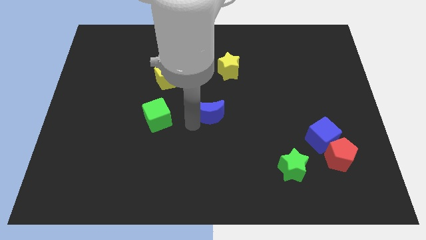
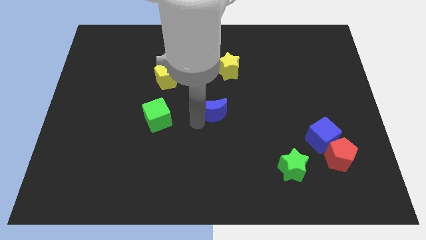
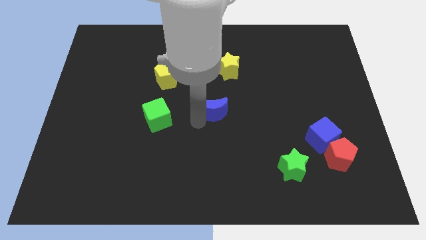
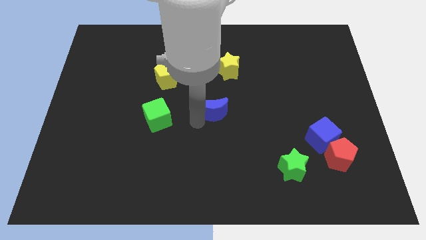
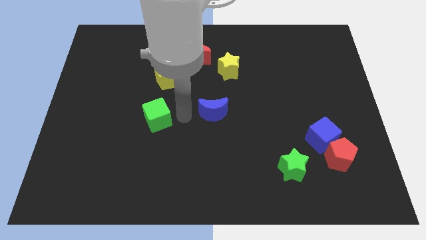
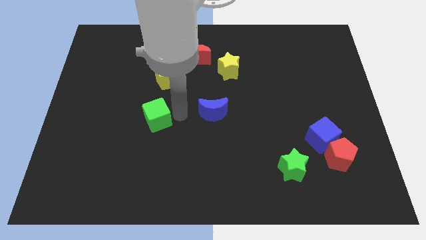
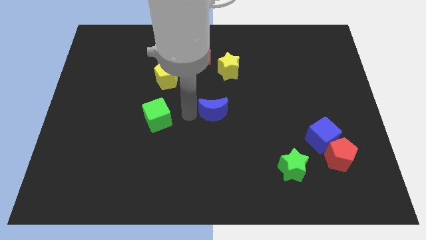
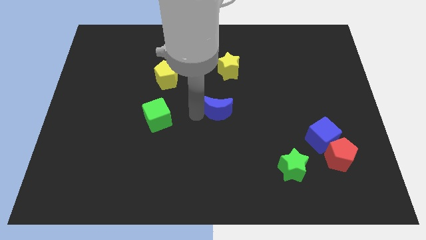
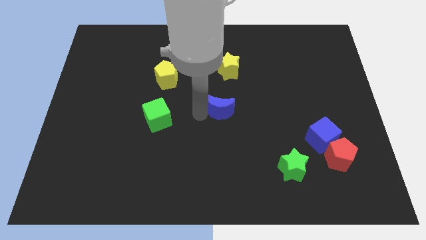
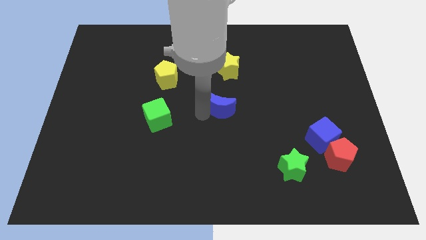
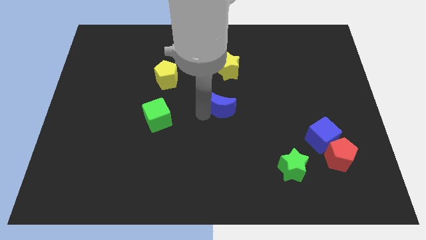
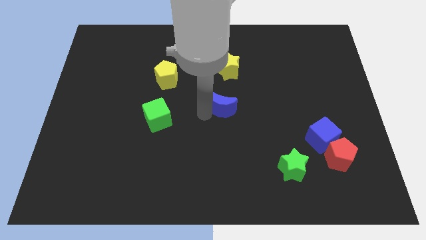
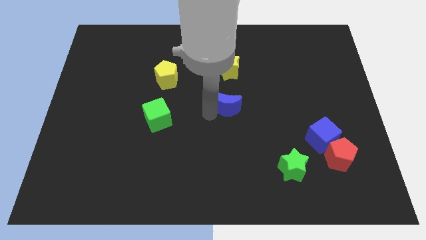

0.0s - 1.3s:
place the blue crescent vertically below the yellow star

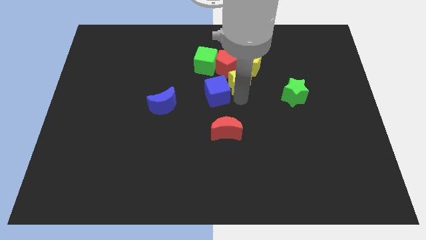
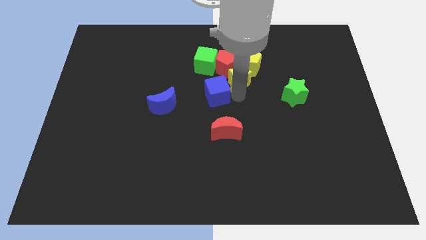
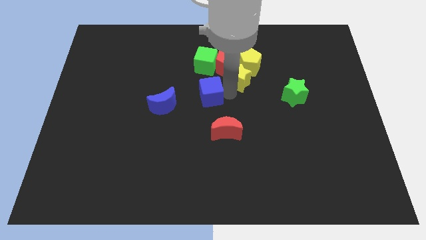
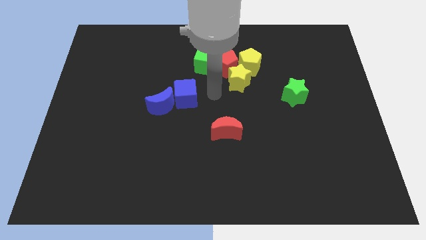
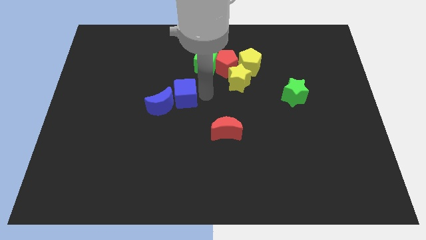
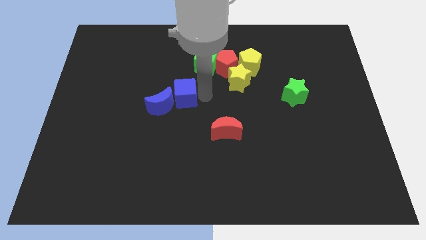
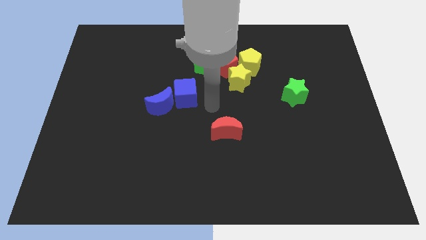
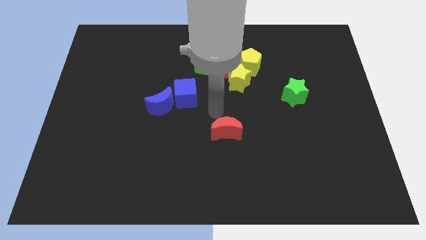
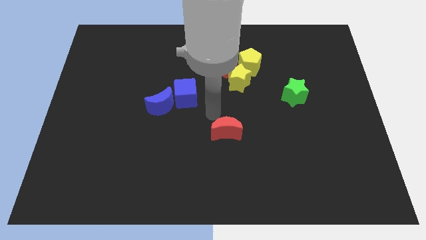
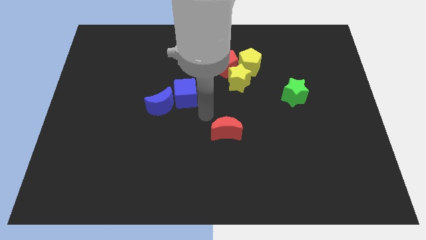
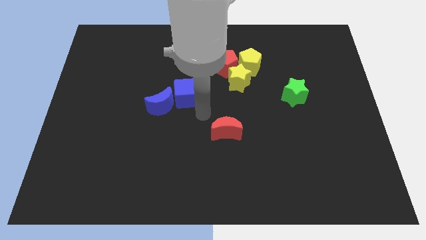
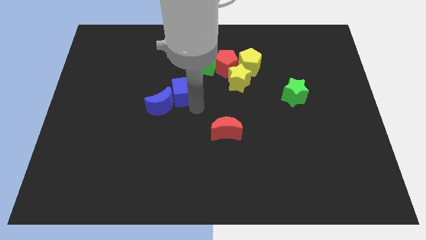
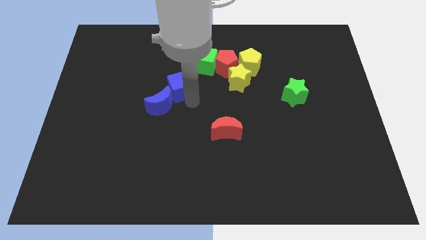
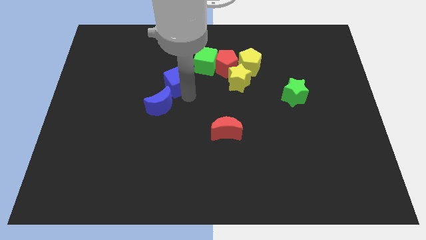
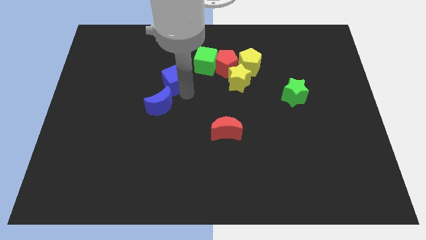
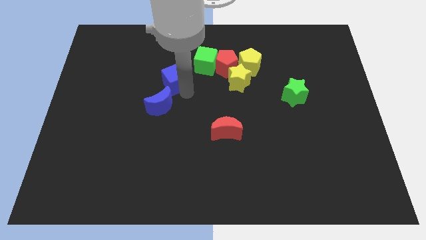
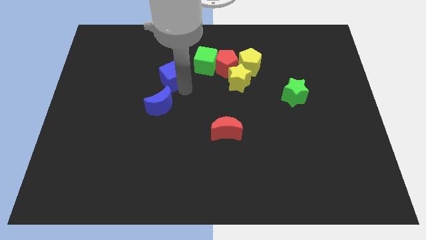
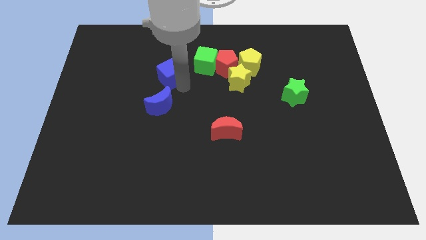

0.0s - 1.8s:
place the blue cube above the blue crescent

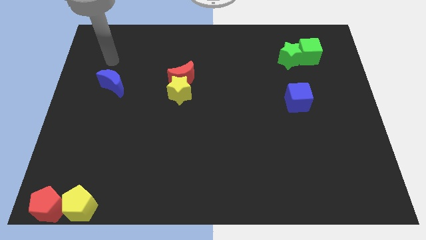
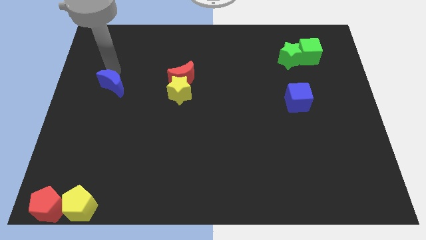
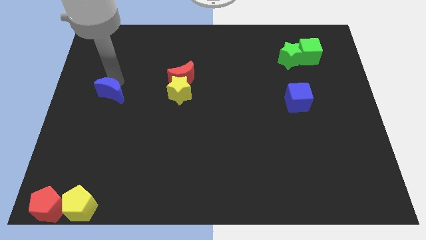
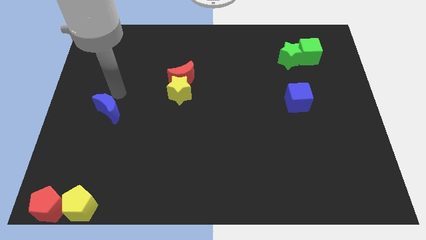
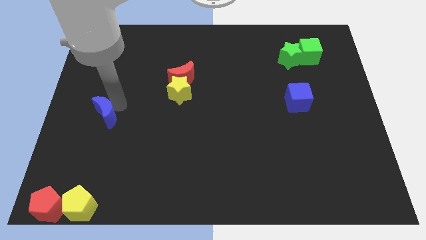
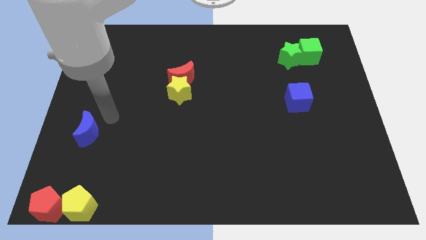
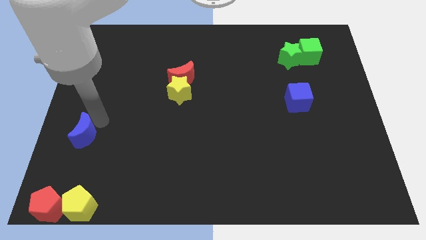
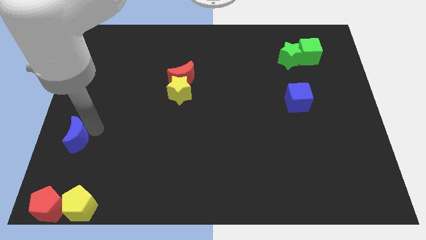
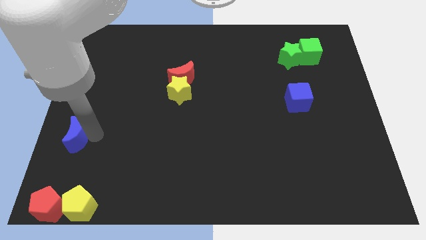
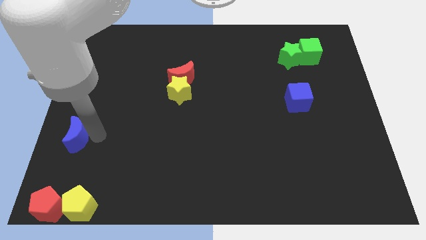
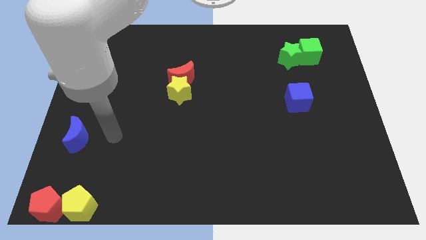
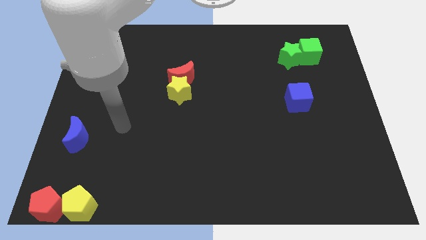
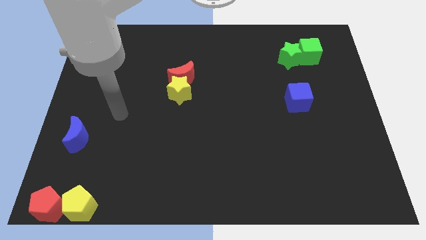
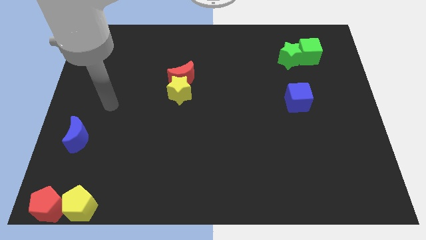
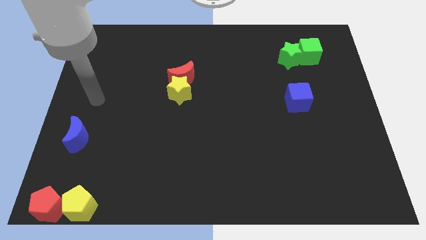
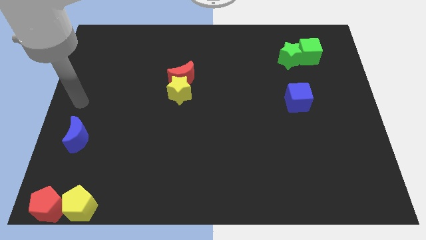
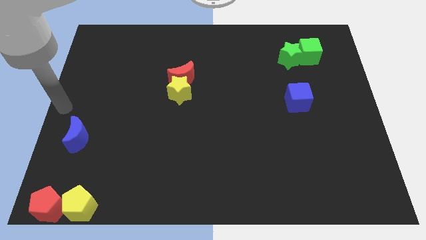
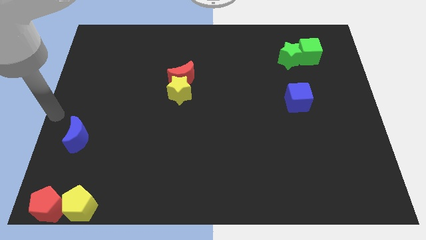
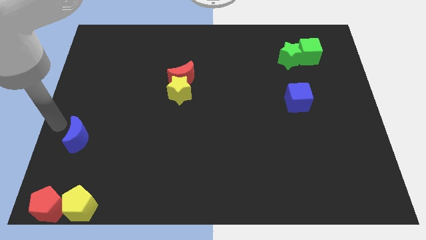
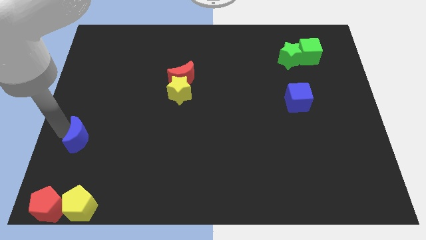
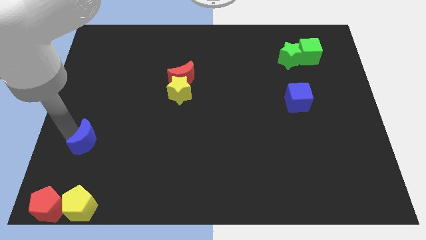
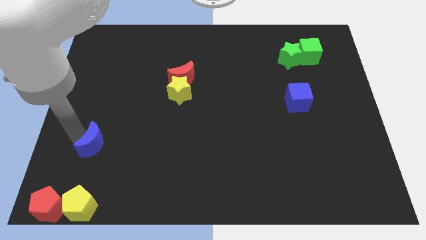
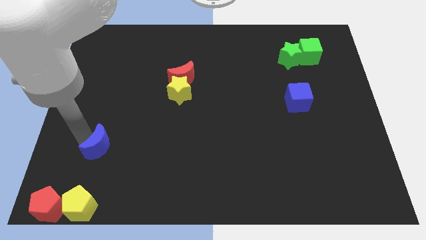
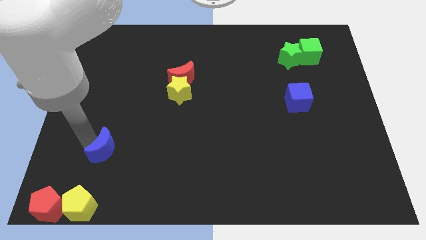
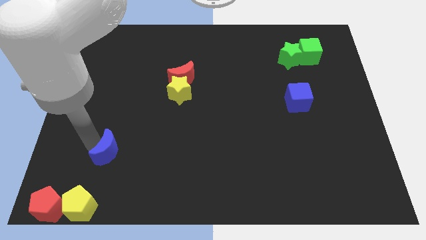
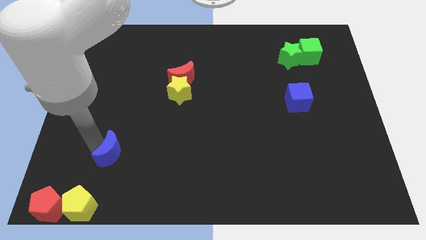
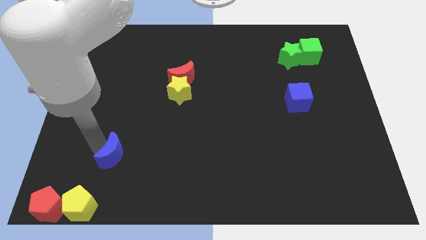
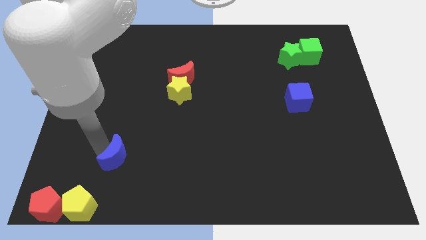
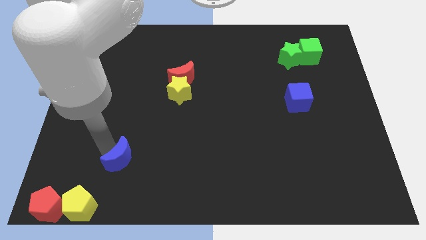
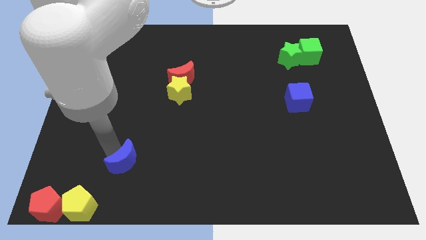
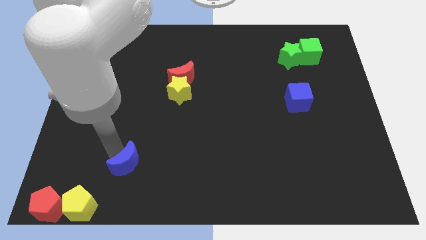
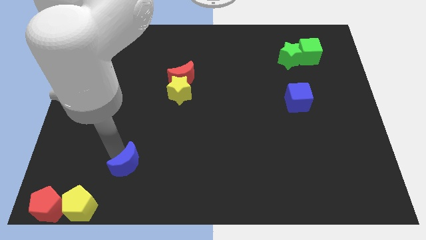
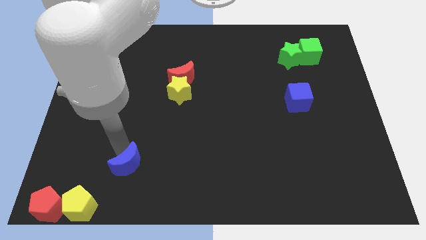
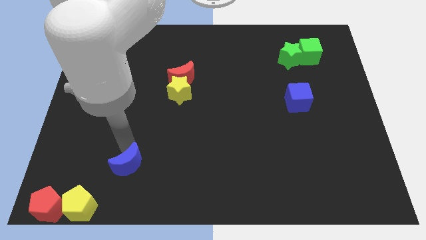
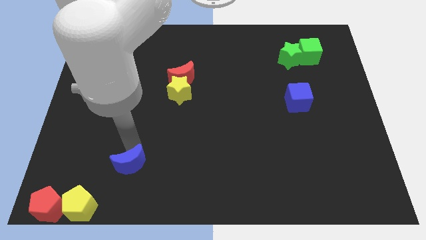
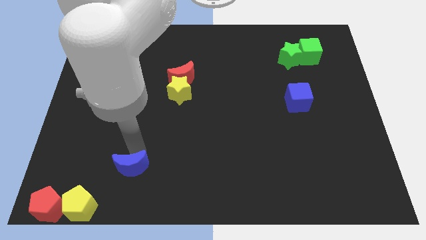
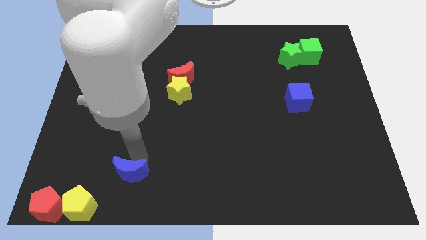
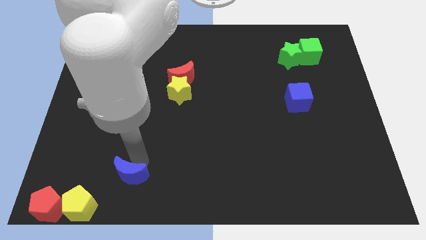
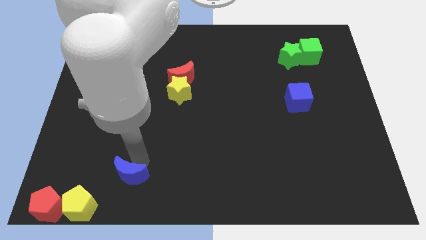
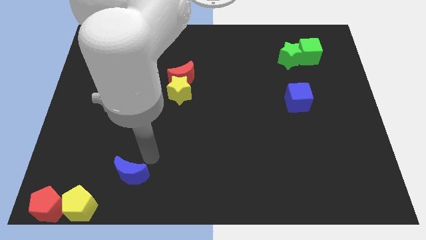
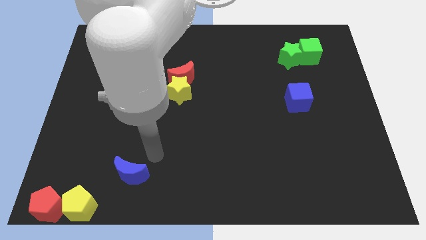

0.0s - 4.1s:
place the blue moon diagonally right to the yellow pentagon

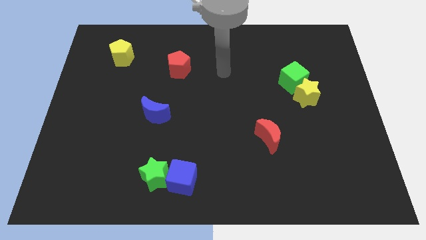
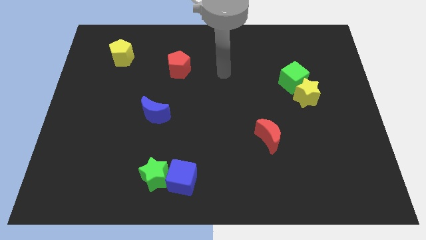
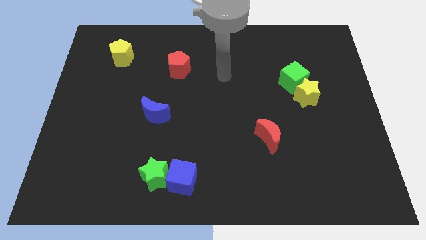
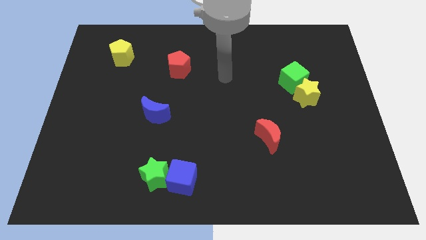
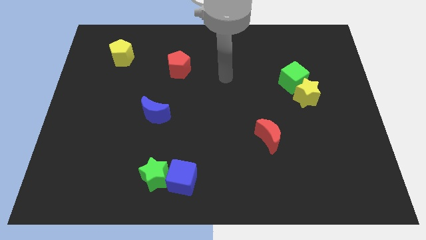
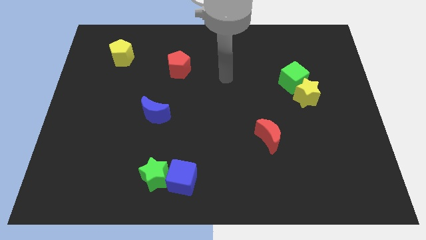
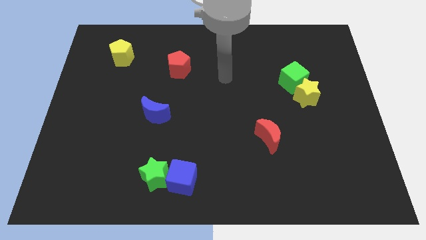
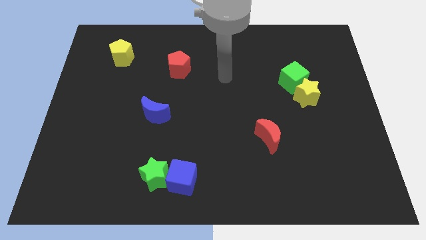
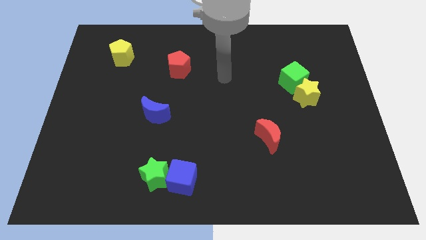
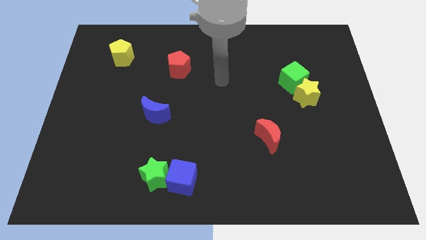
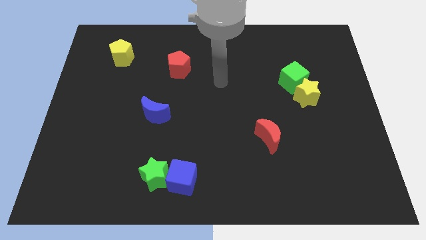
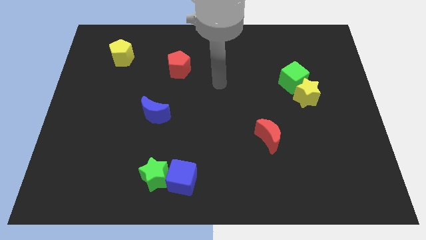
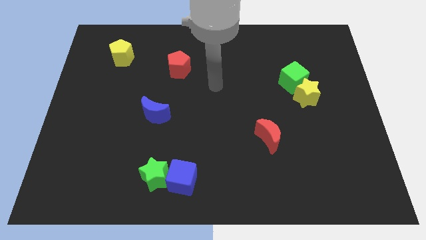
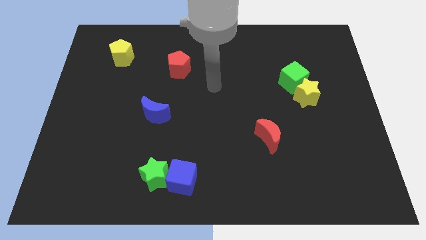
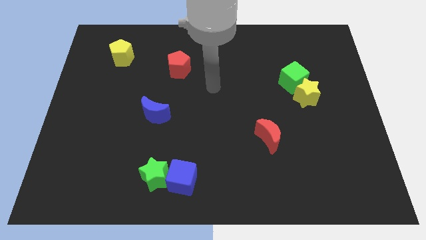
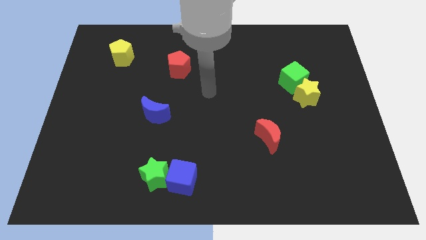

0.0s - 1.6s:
put your hand in between the red pentagon and red crescent

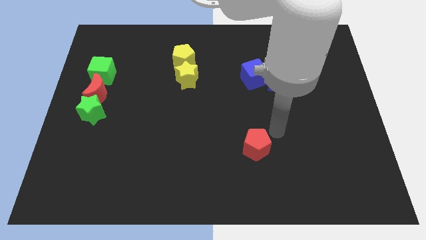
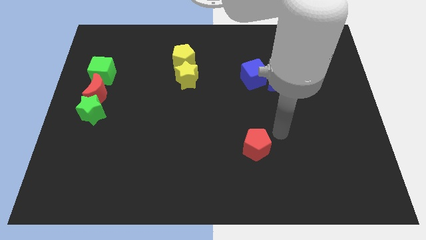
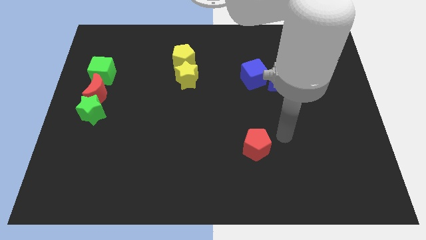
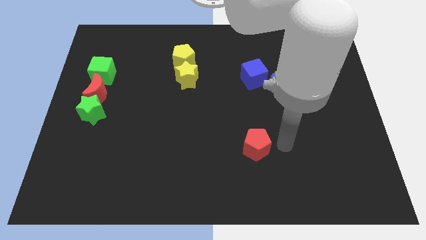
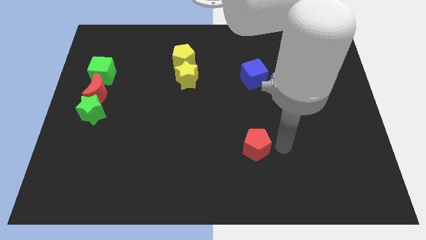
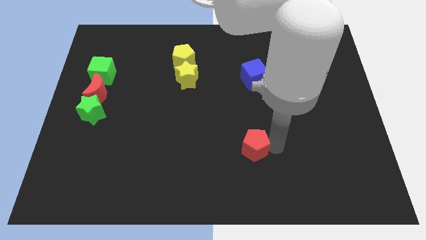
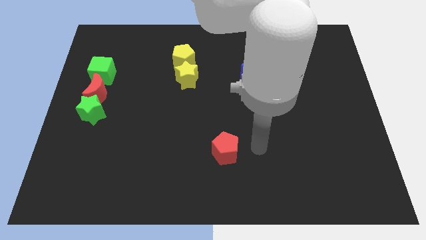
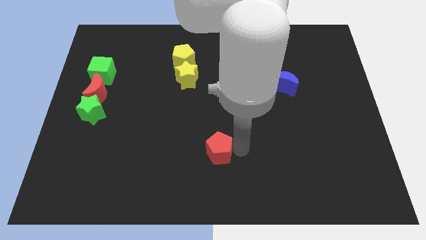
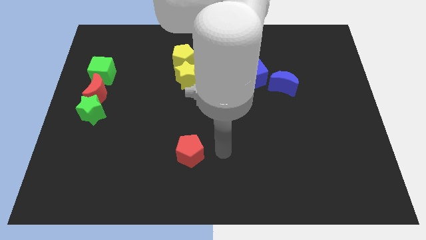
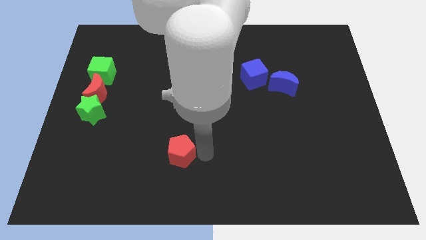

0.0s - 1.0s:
place red pentagon vertically below yellow star
